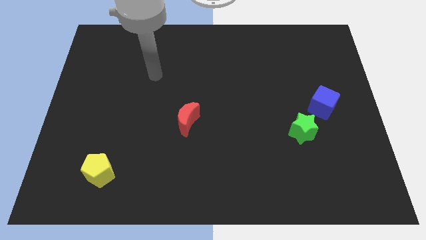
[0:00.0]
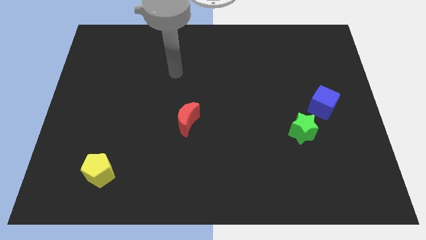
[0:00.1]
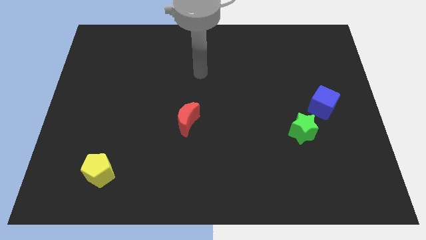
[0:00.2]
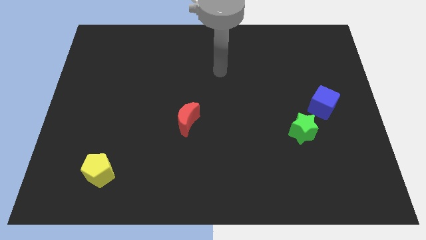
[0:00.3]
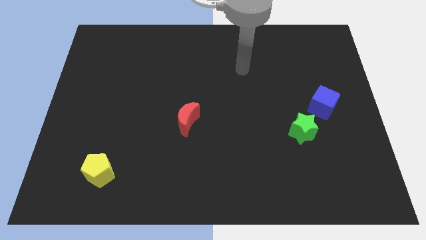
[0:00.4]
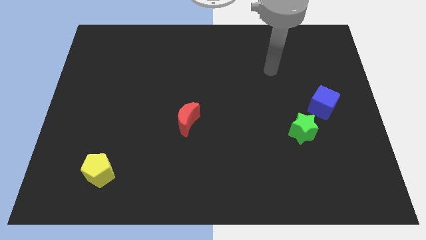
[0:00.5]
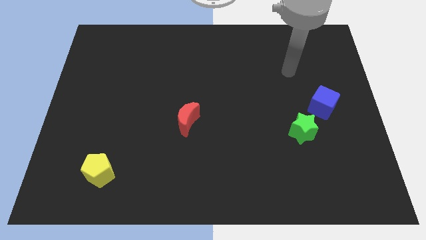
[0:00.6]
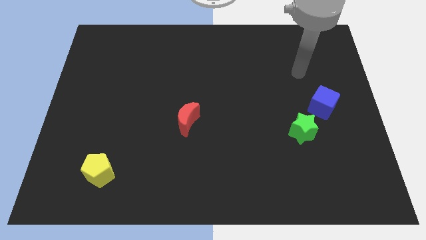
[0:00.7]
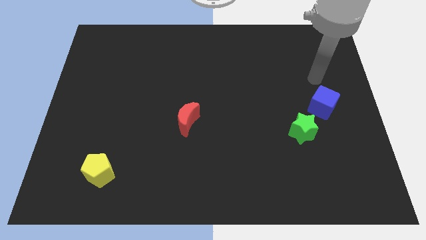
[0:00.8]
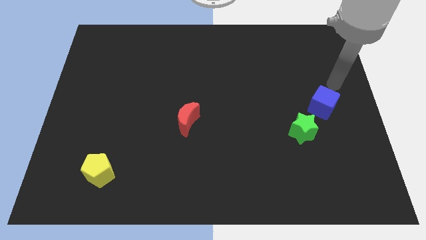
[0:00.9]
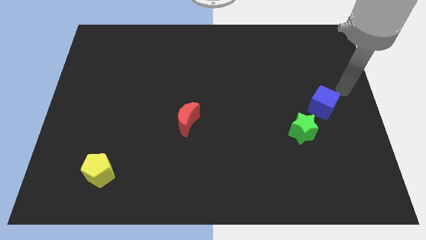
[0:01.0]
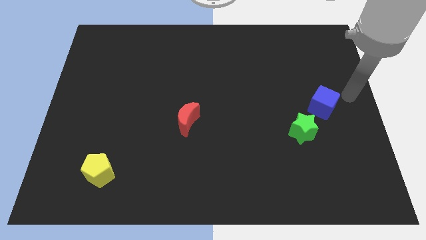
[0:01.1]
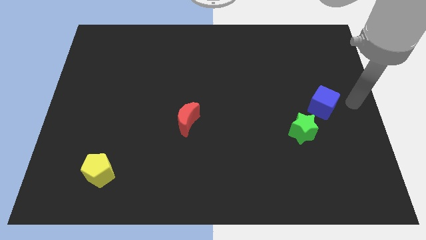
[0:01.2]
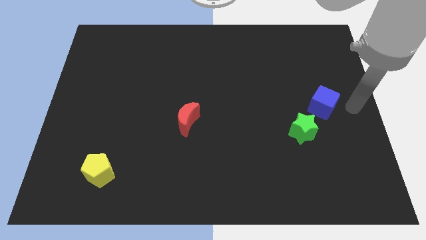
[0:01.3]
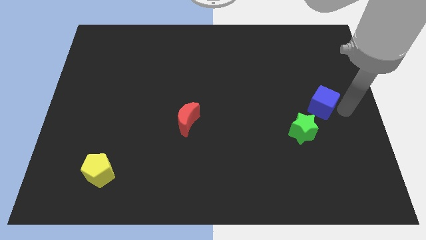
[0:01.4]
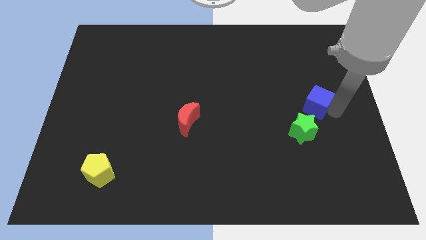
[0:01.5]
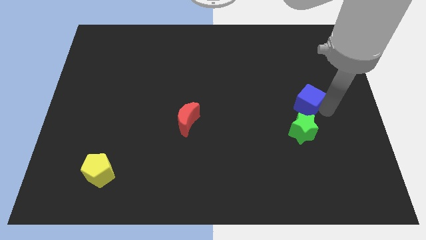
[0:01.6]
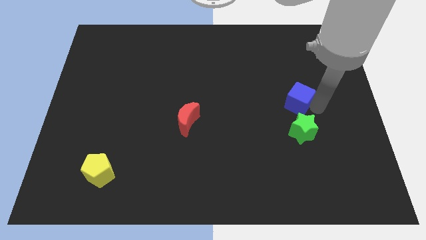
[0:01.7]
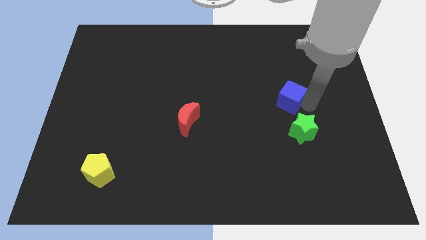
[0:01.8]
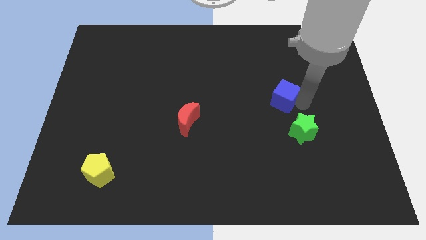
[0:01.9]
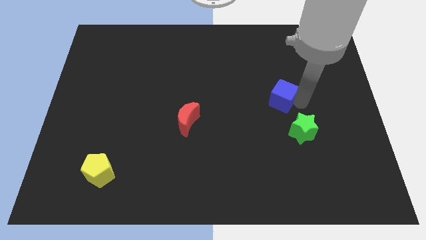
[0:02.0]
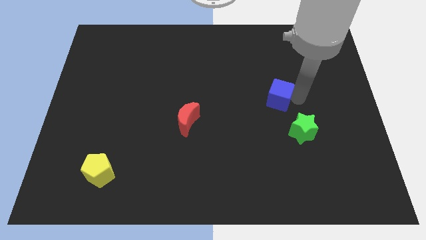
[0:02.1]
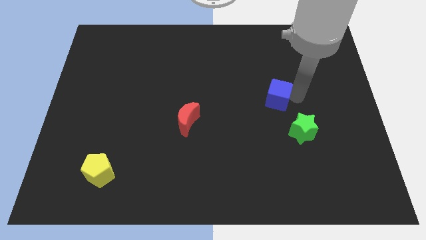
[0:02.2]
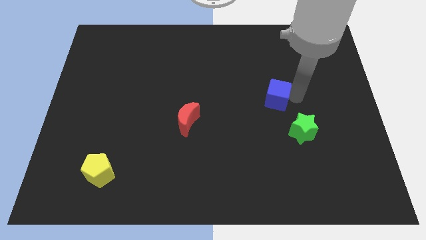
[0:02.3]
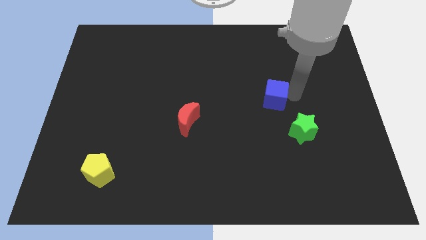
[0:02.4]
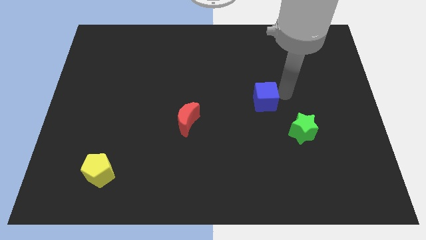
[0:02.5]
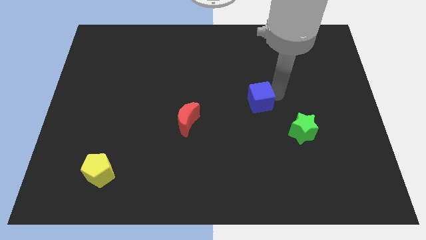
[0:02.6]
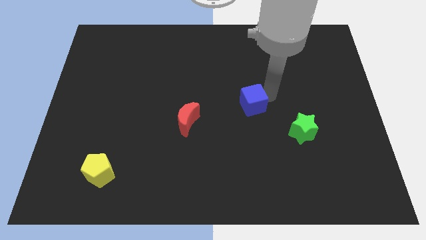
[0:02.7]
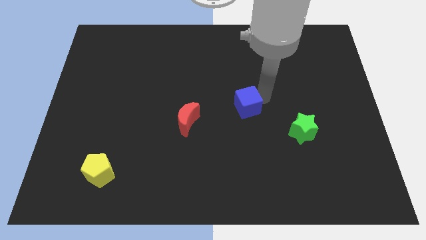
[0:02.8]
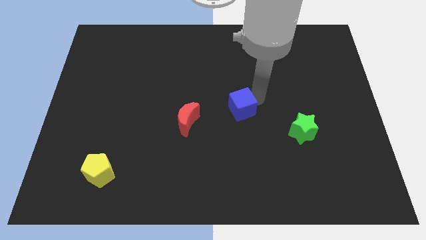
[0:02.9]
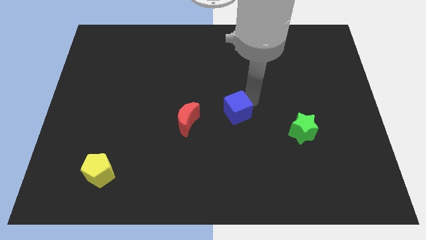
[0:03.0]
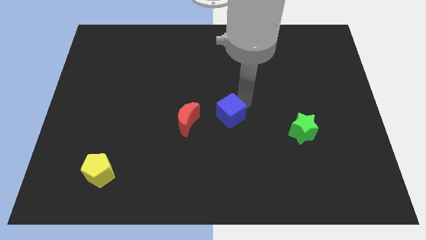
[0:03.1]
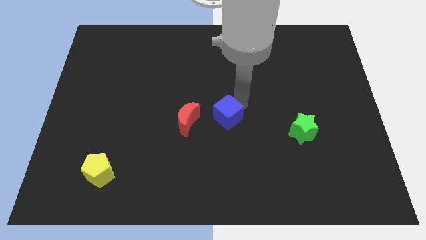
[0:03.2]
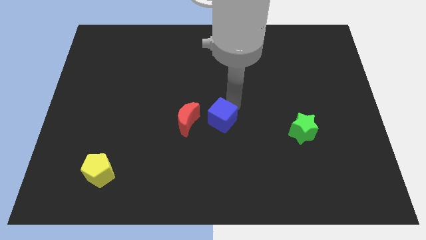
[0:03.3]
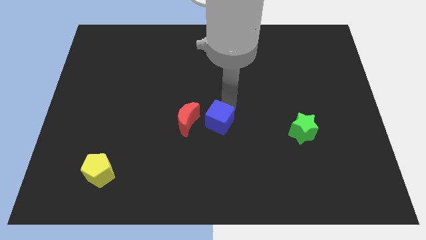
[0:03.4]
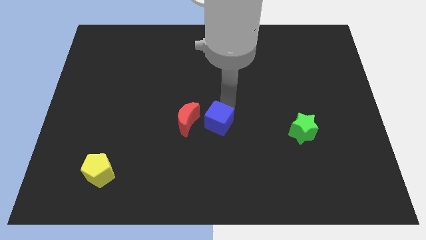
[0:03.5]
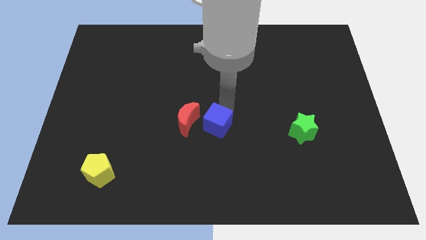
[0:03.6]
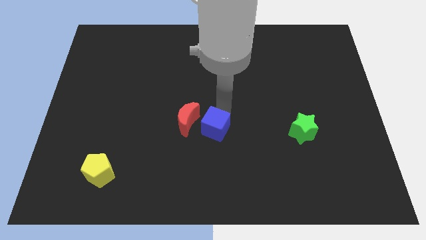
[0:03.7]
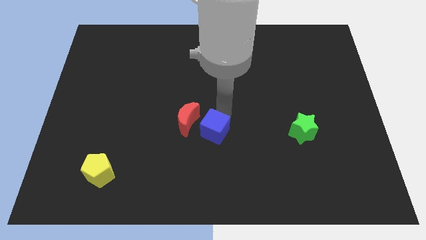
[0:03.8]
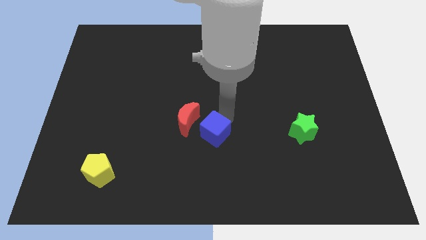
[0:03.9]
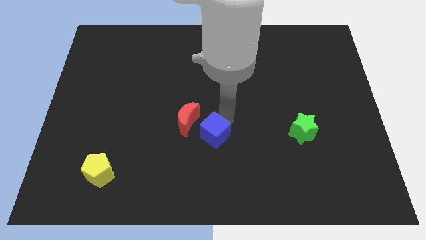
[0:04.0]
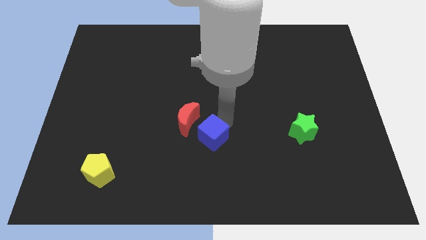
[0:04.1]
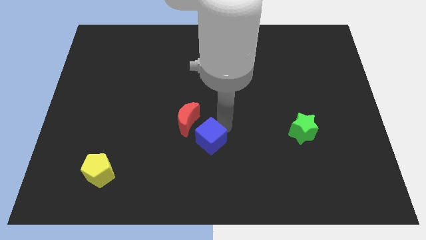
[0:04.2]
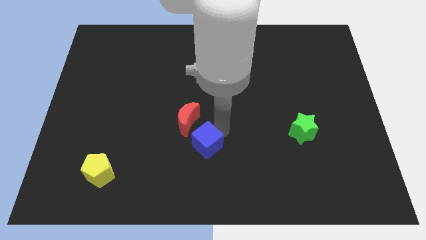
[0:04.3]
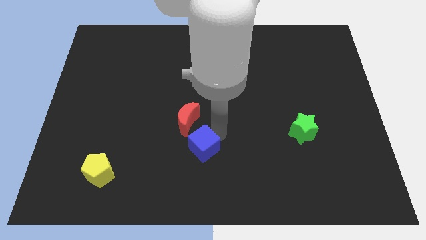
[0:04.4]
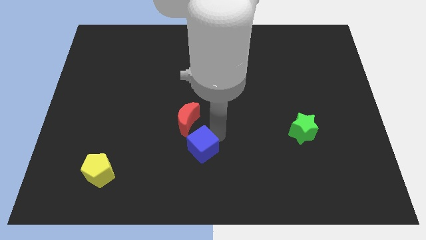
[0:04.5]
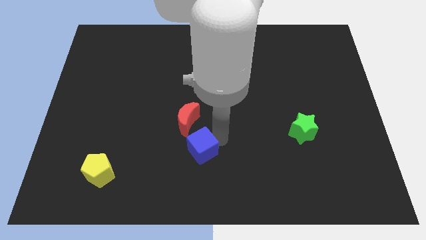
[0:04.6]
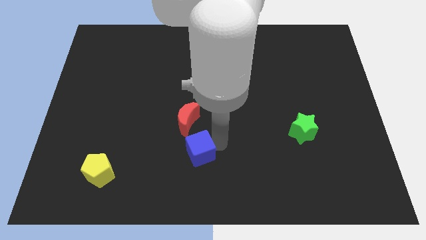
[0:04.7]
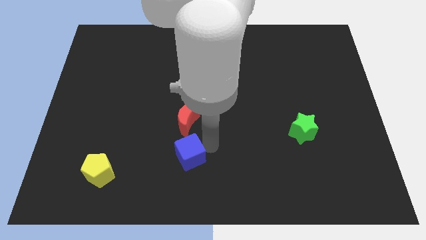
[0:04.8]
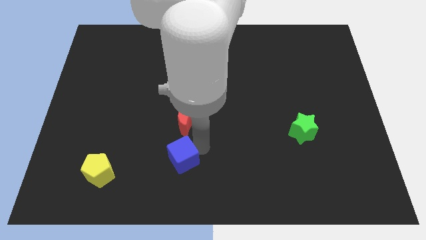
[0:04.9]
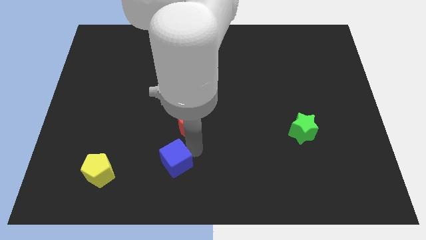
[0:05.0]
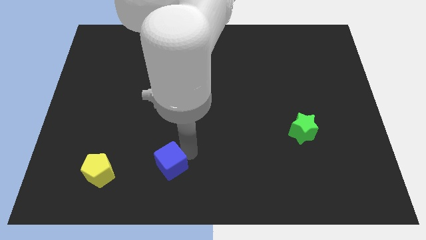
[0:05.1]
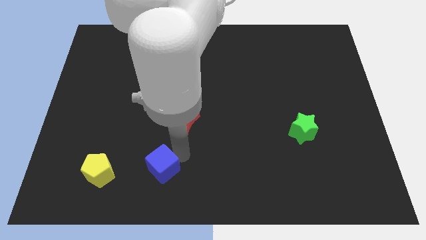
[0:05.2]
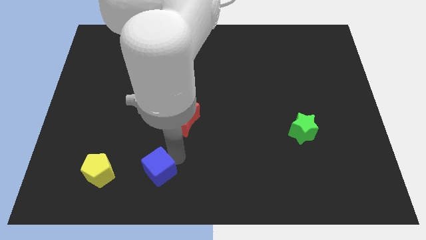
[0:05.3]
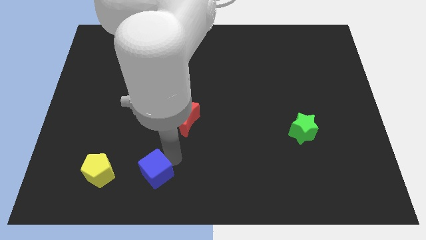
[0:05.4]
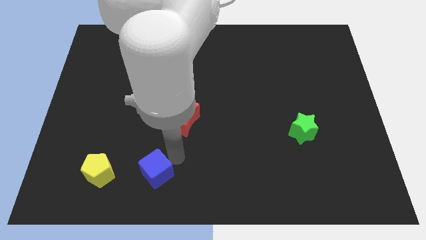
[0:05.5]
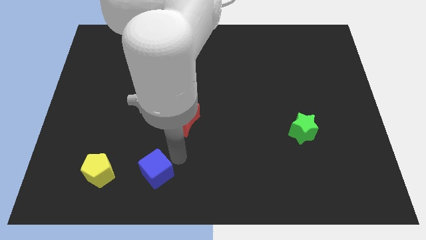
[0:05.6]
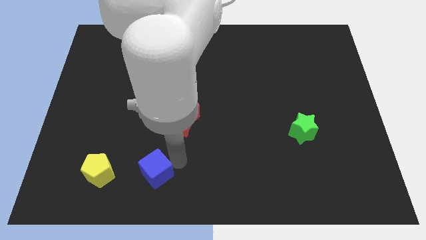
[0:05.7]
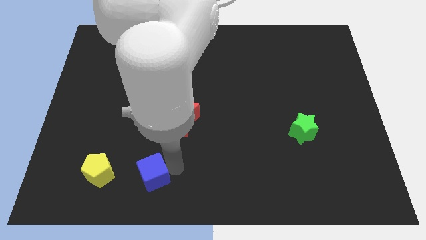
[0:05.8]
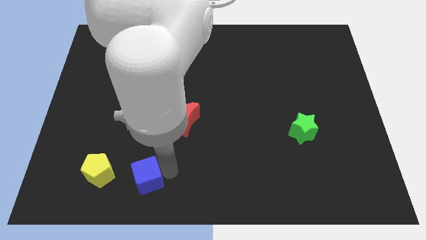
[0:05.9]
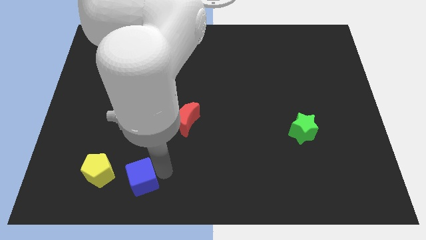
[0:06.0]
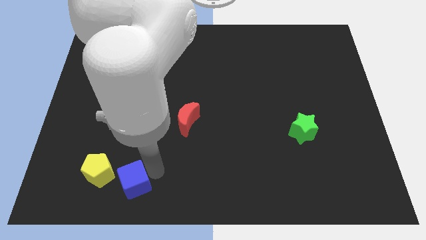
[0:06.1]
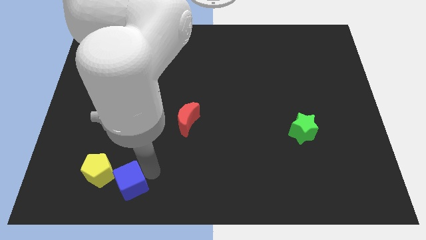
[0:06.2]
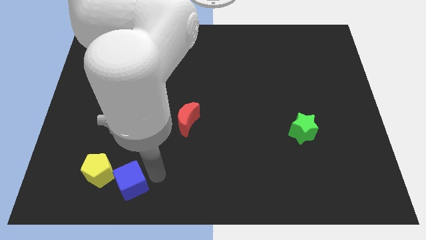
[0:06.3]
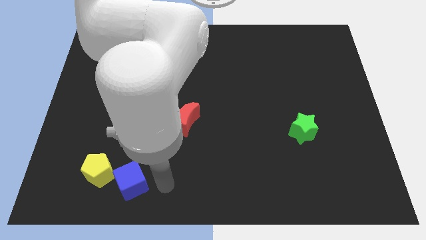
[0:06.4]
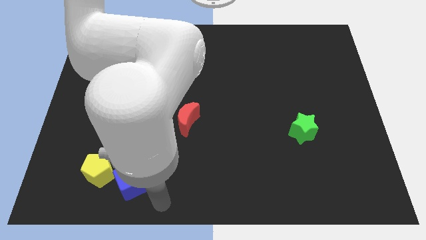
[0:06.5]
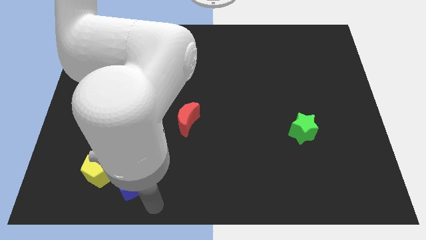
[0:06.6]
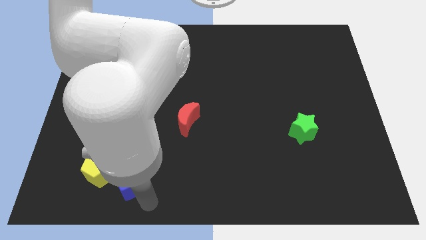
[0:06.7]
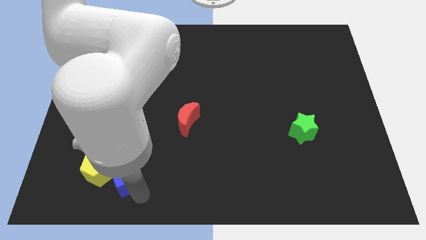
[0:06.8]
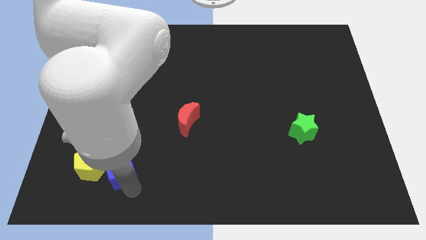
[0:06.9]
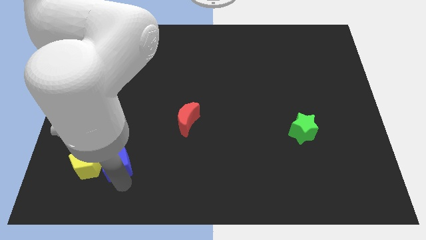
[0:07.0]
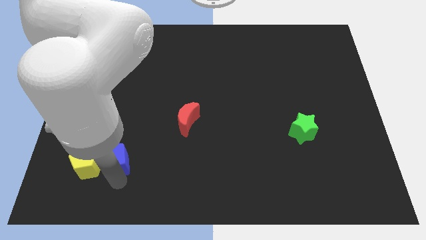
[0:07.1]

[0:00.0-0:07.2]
put the blue block next to the yellow pentagon

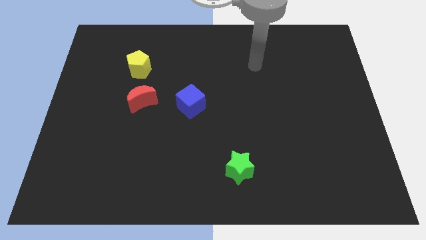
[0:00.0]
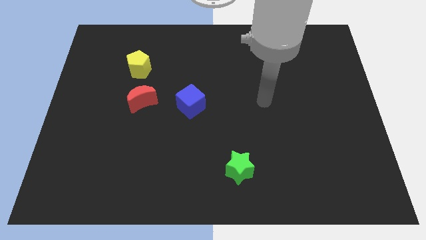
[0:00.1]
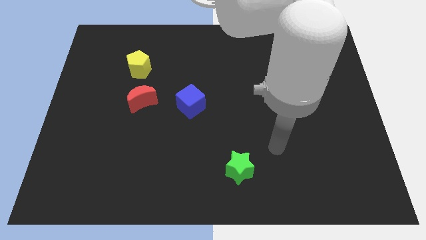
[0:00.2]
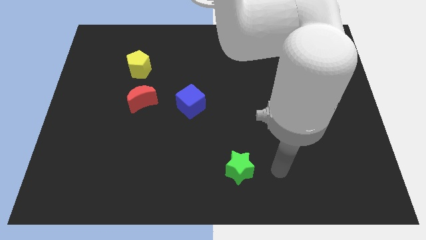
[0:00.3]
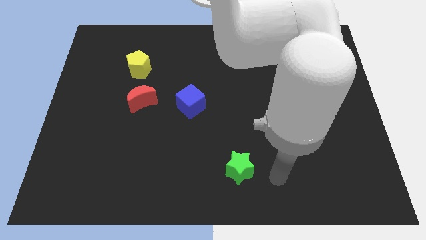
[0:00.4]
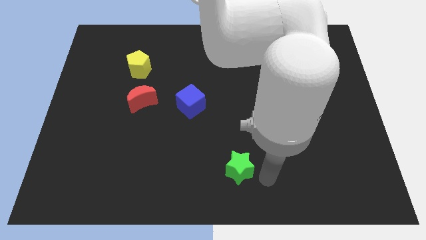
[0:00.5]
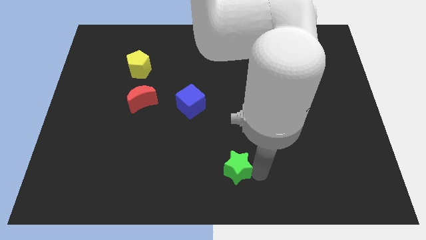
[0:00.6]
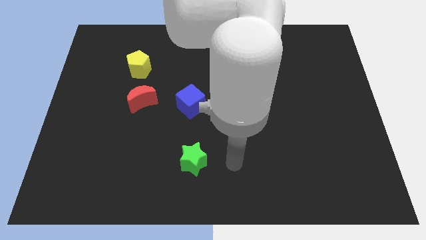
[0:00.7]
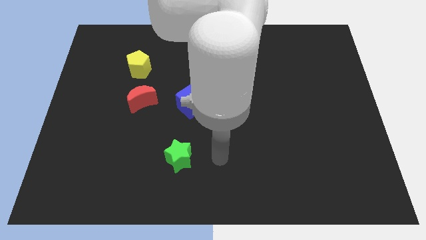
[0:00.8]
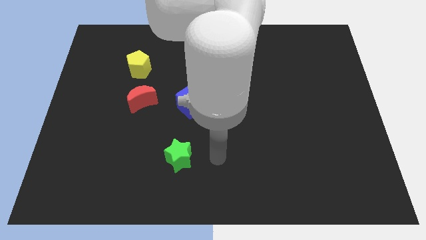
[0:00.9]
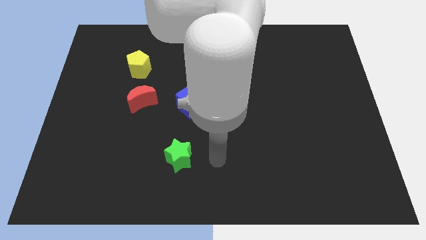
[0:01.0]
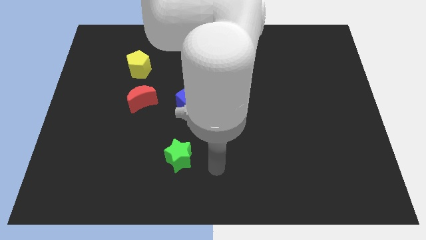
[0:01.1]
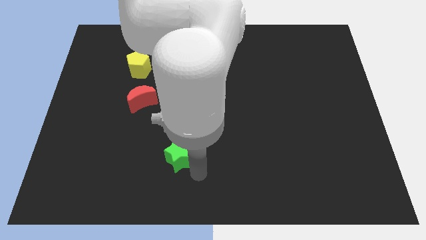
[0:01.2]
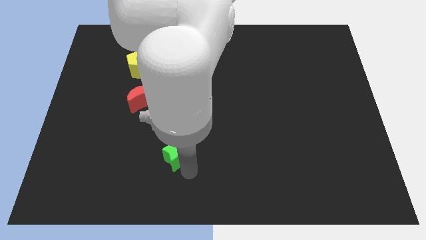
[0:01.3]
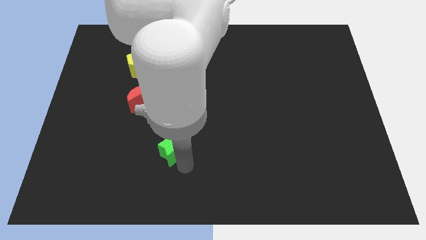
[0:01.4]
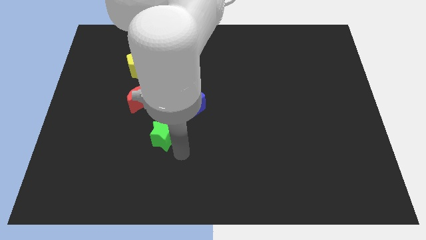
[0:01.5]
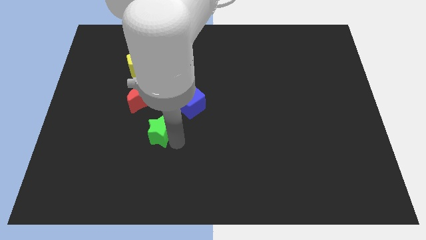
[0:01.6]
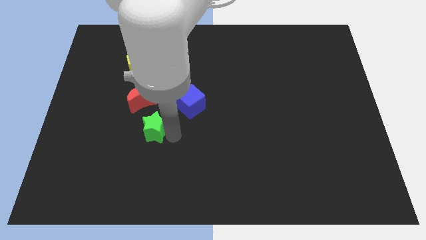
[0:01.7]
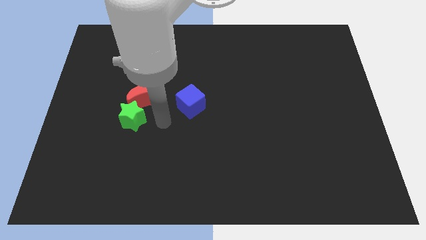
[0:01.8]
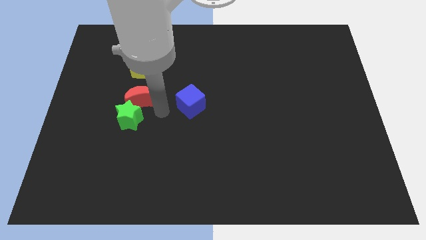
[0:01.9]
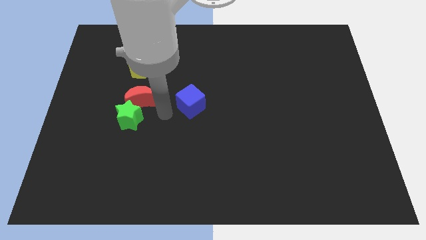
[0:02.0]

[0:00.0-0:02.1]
move the green block close to the moon
